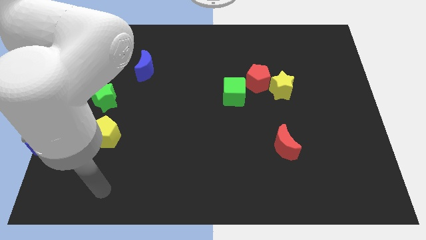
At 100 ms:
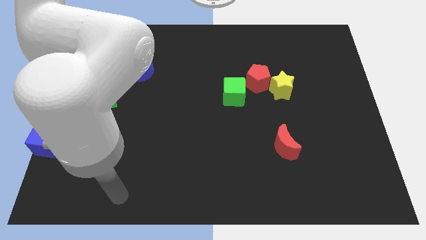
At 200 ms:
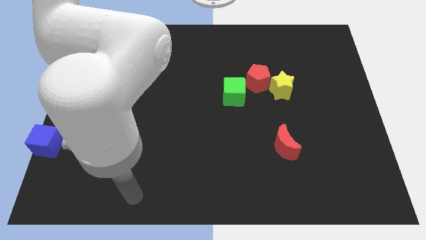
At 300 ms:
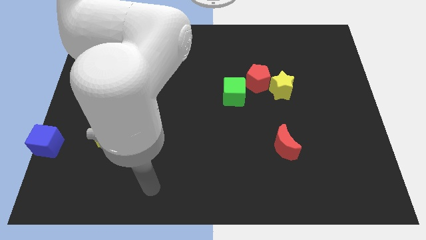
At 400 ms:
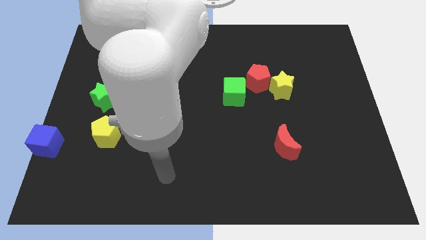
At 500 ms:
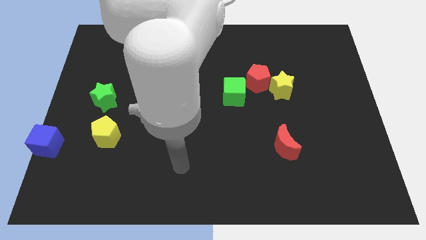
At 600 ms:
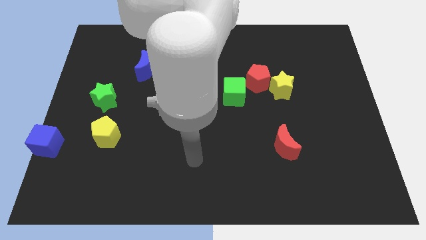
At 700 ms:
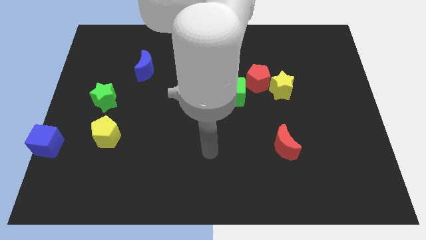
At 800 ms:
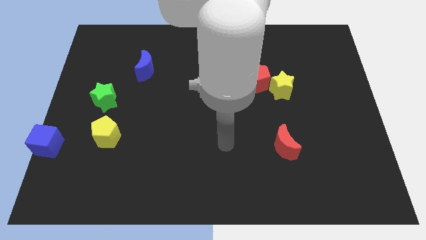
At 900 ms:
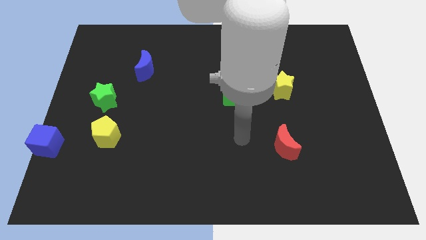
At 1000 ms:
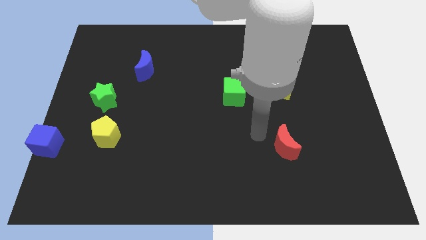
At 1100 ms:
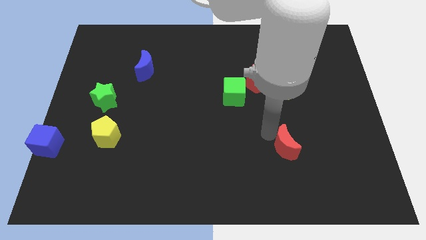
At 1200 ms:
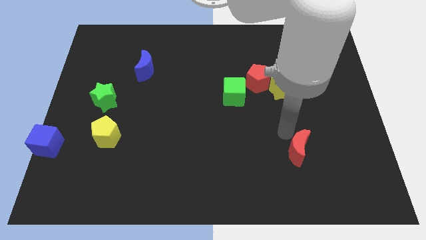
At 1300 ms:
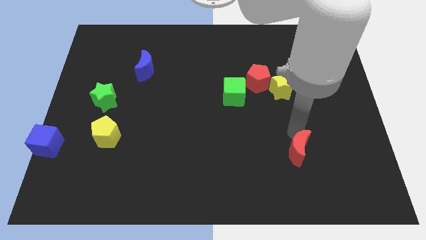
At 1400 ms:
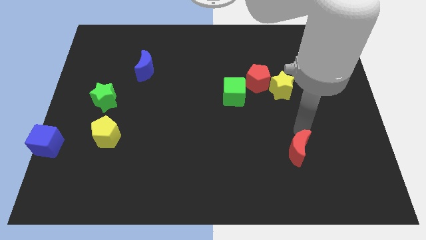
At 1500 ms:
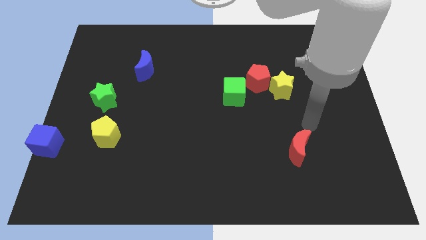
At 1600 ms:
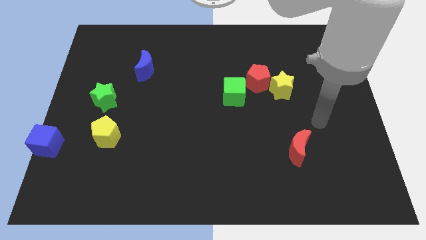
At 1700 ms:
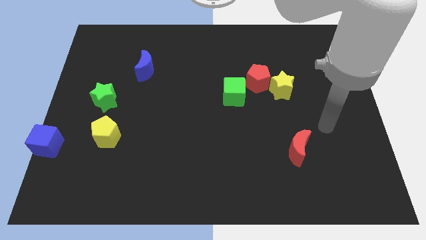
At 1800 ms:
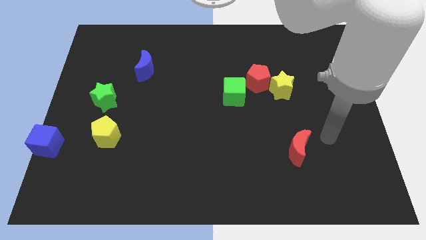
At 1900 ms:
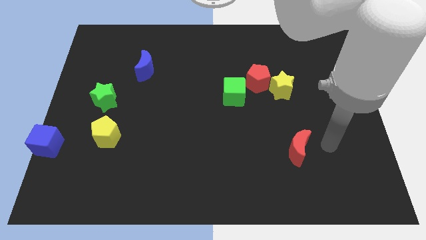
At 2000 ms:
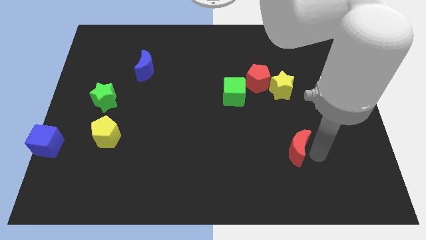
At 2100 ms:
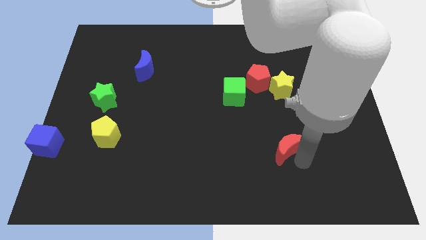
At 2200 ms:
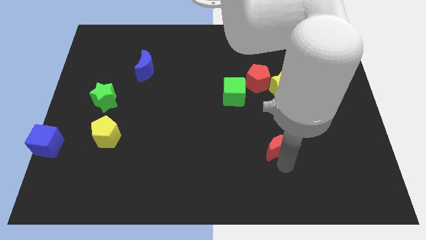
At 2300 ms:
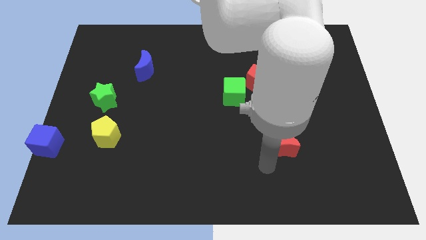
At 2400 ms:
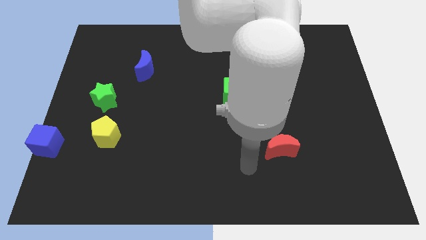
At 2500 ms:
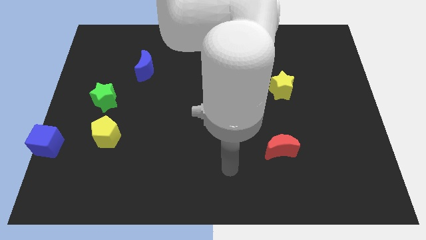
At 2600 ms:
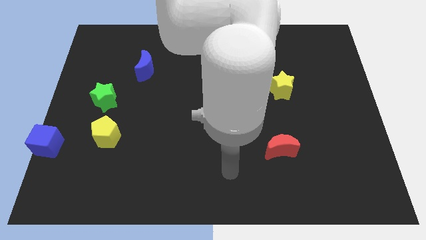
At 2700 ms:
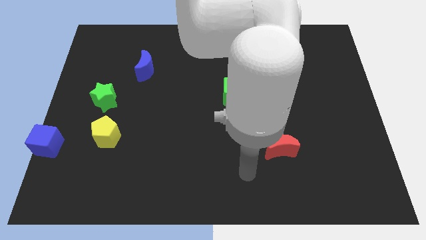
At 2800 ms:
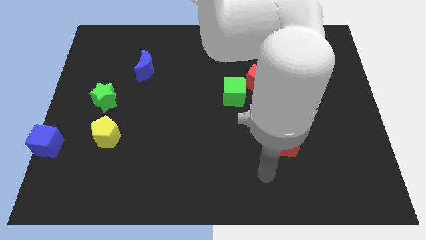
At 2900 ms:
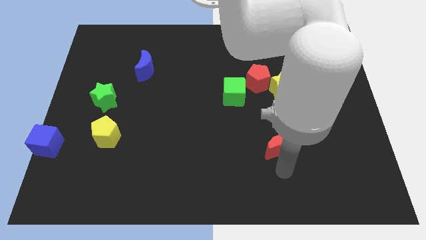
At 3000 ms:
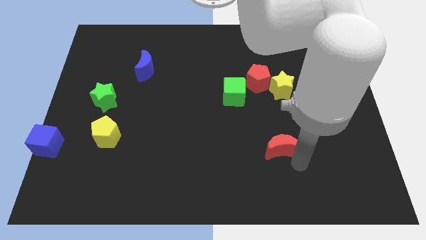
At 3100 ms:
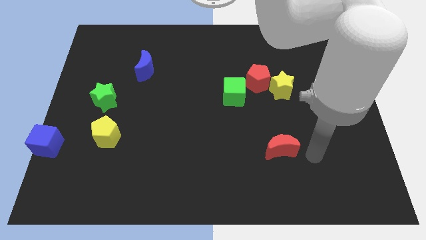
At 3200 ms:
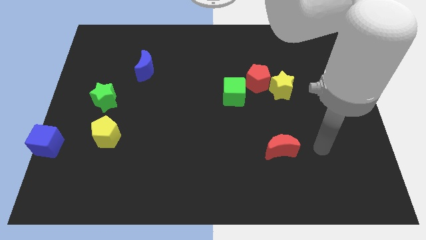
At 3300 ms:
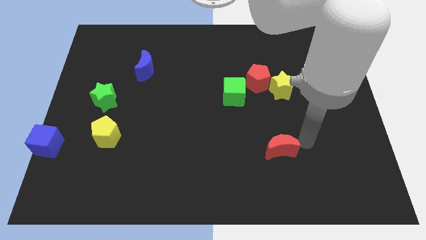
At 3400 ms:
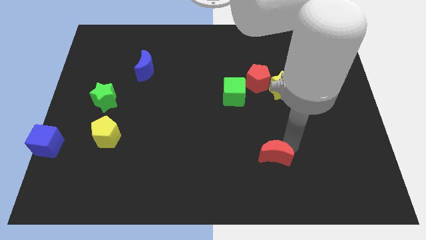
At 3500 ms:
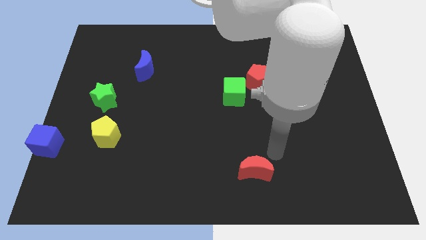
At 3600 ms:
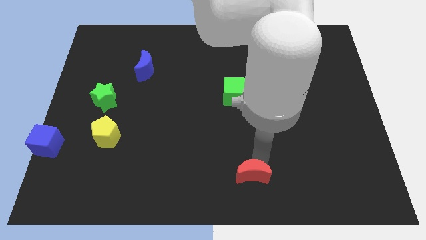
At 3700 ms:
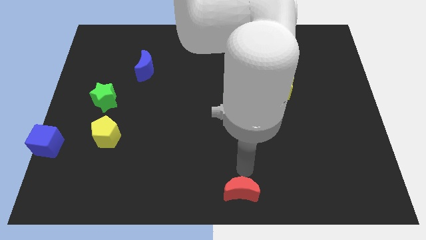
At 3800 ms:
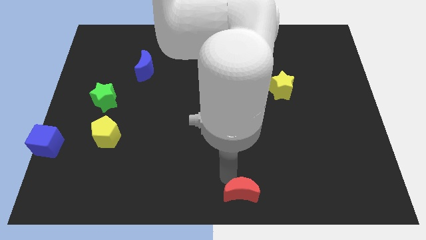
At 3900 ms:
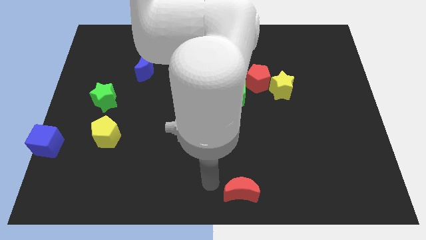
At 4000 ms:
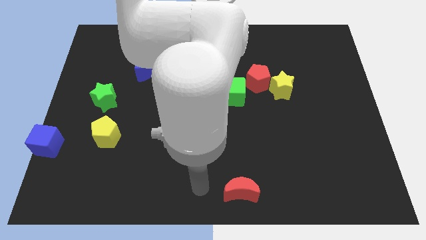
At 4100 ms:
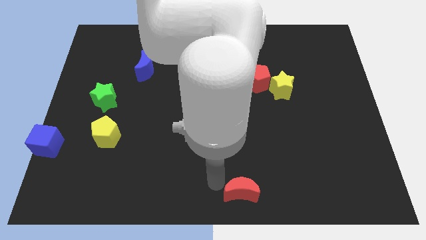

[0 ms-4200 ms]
push red crescent towards bottom center

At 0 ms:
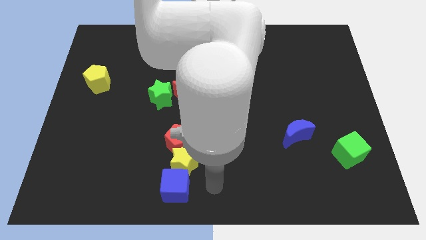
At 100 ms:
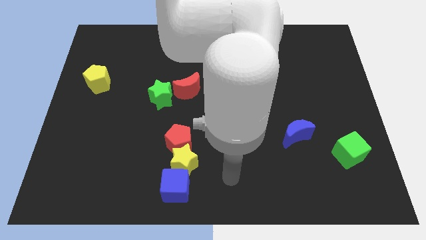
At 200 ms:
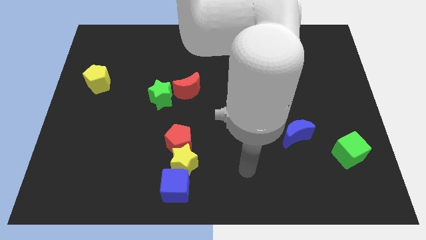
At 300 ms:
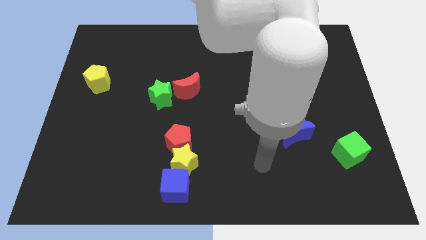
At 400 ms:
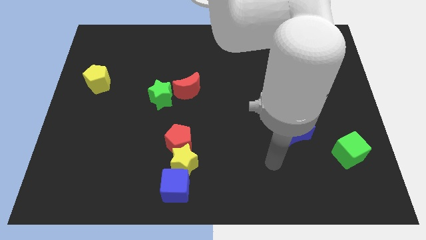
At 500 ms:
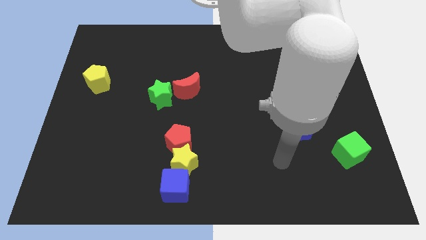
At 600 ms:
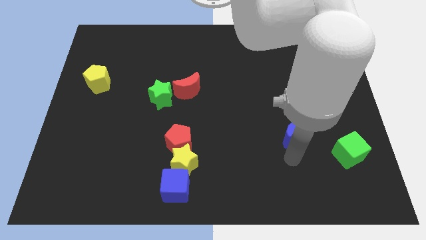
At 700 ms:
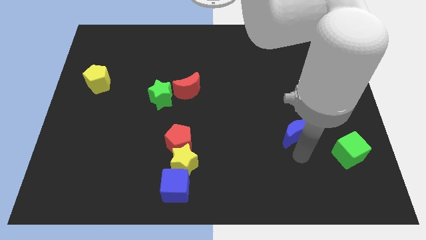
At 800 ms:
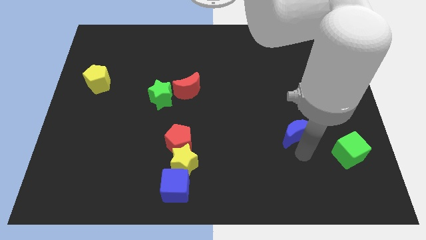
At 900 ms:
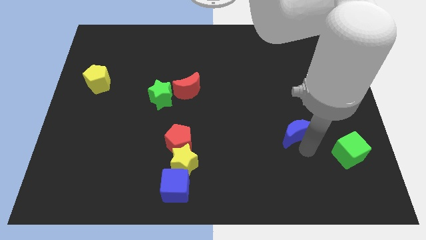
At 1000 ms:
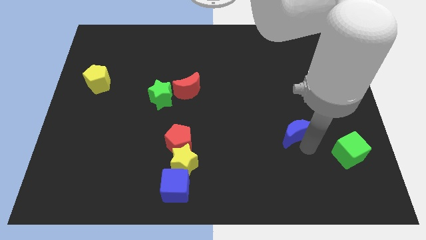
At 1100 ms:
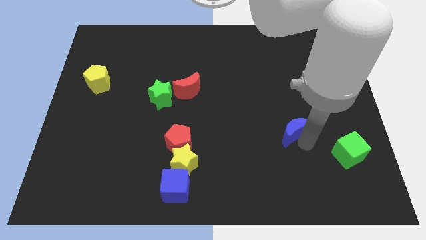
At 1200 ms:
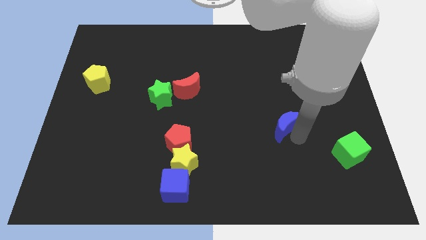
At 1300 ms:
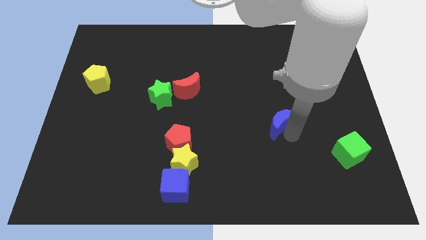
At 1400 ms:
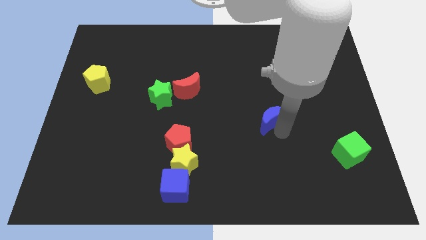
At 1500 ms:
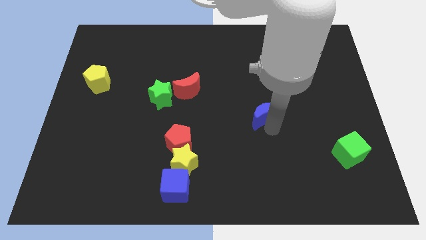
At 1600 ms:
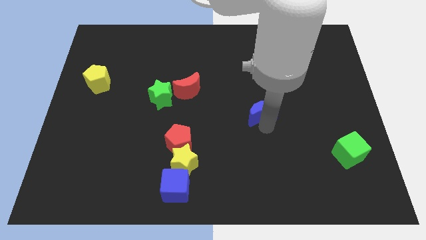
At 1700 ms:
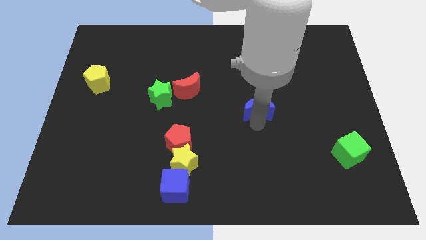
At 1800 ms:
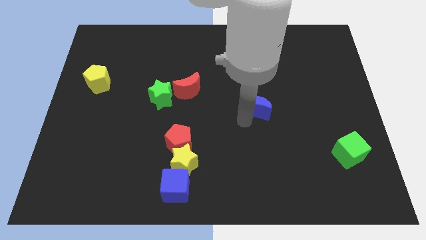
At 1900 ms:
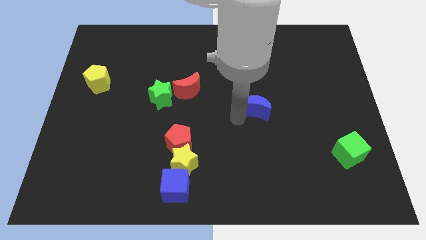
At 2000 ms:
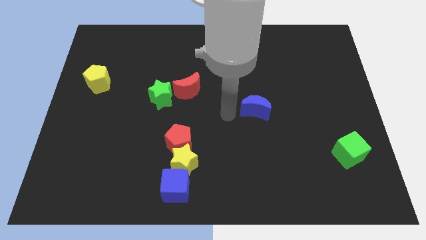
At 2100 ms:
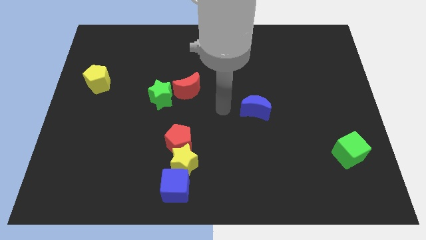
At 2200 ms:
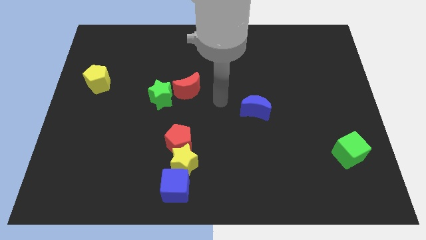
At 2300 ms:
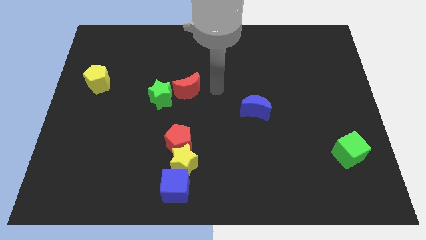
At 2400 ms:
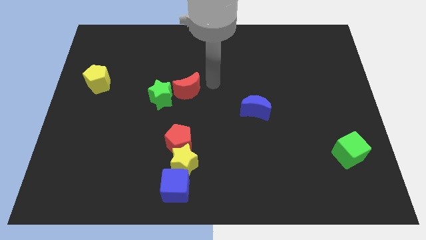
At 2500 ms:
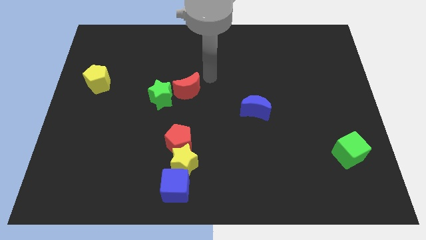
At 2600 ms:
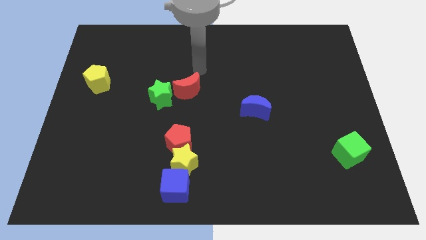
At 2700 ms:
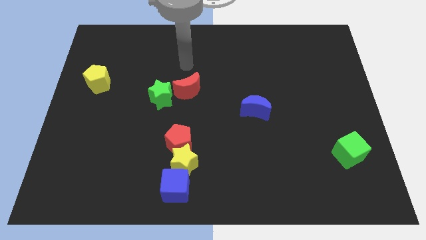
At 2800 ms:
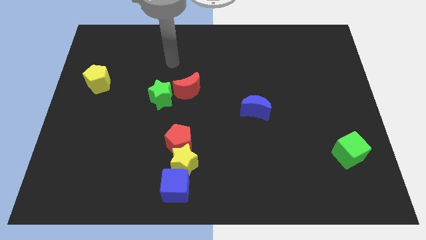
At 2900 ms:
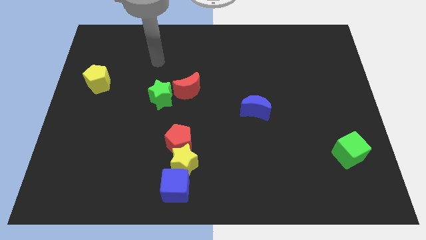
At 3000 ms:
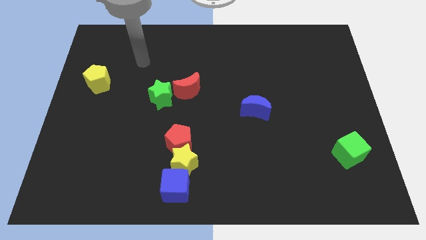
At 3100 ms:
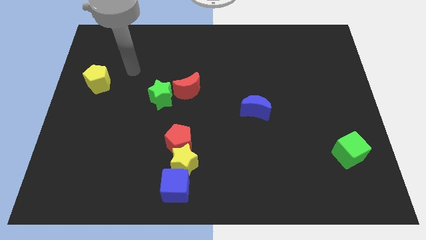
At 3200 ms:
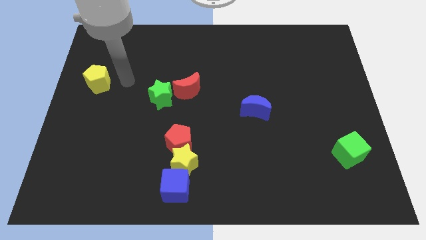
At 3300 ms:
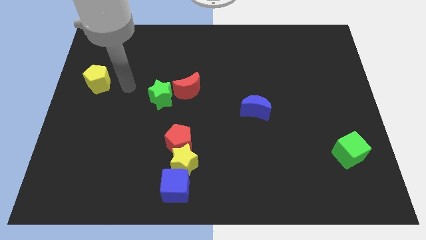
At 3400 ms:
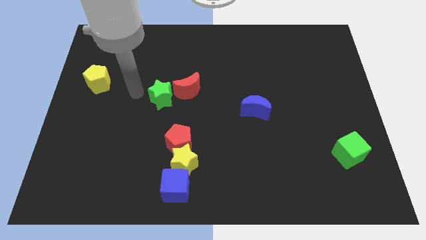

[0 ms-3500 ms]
slightly move blue crescent in between the red crescent and green cube

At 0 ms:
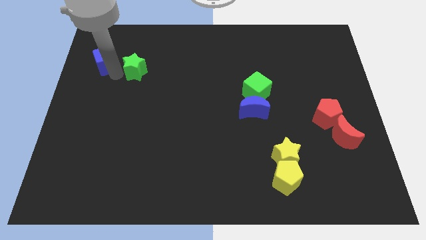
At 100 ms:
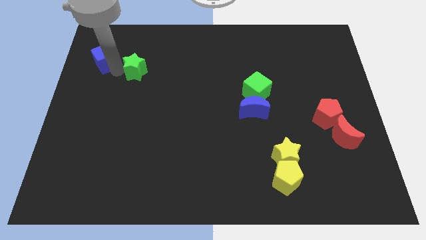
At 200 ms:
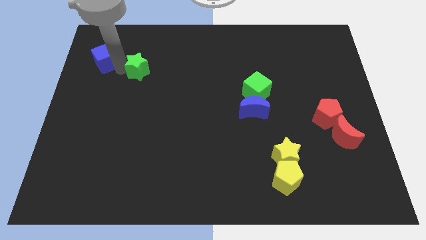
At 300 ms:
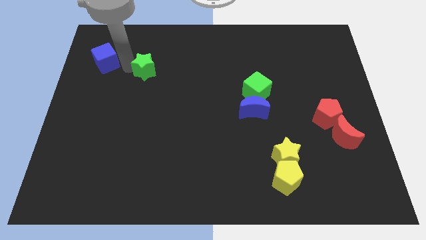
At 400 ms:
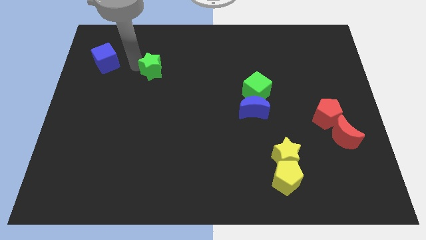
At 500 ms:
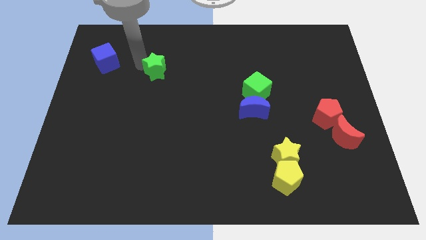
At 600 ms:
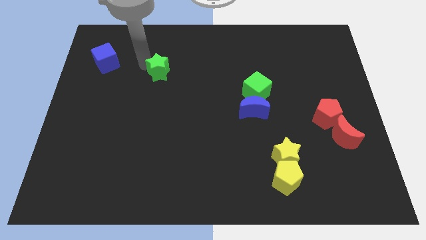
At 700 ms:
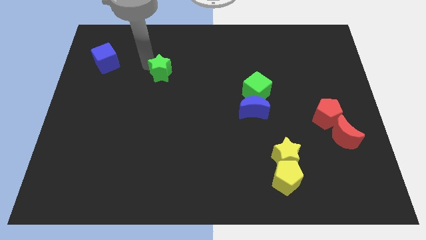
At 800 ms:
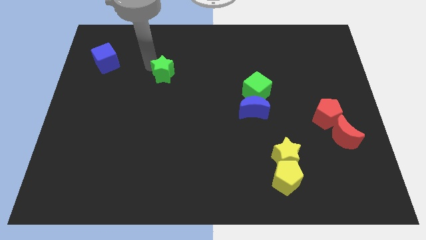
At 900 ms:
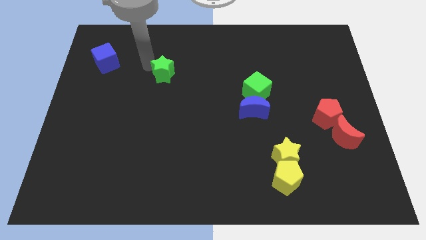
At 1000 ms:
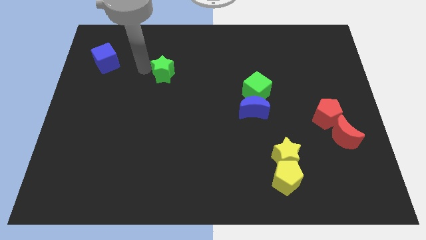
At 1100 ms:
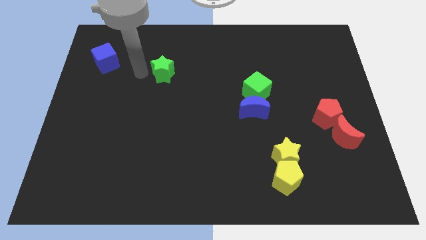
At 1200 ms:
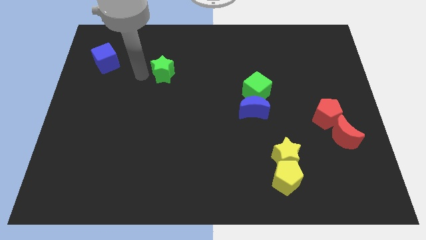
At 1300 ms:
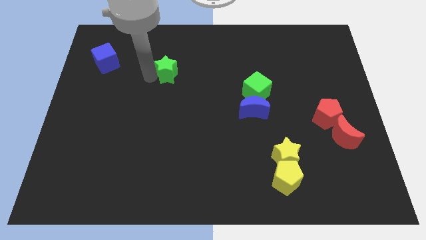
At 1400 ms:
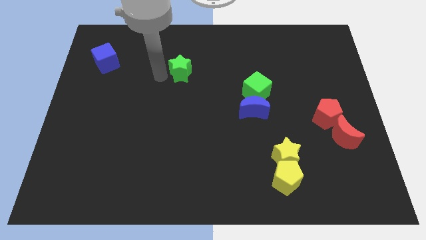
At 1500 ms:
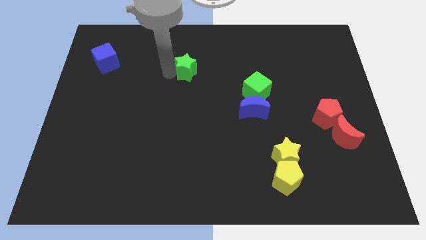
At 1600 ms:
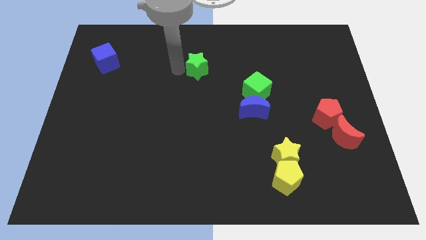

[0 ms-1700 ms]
move the green star away from the blue cube
